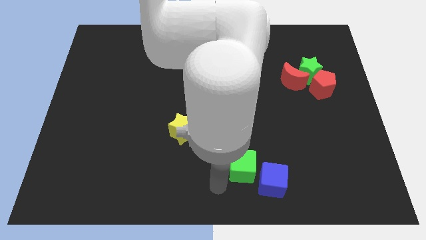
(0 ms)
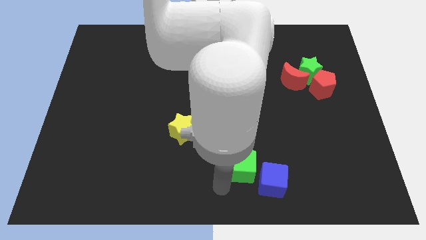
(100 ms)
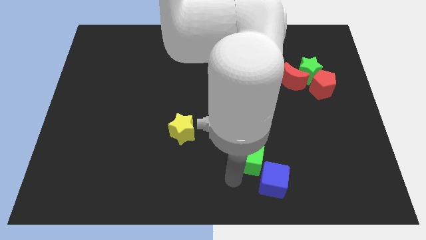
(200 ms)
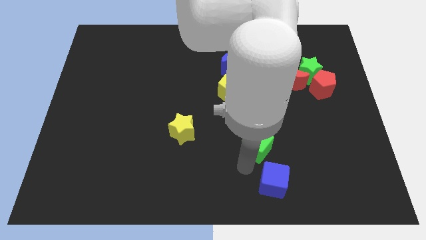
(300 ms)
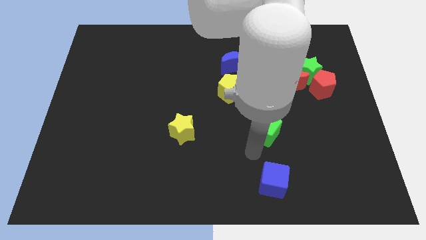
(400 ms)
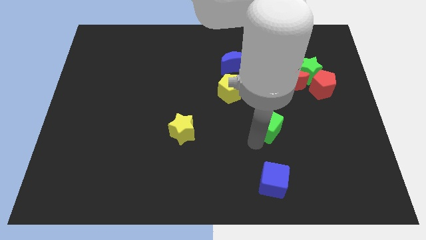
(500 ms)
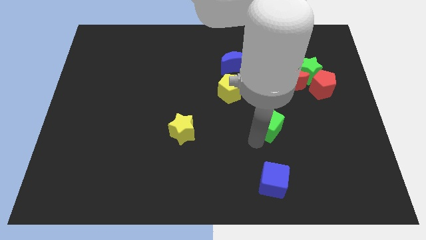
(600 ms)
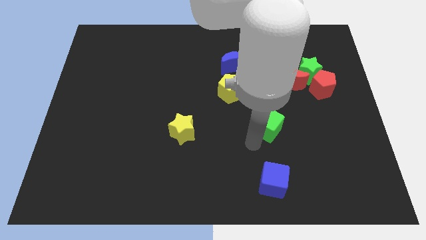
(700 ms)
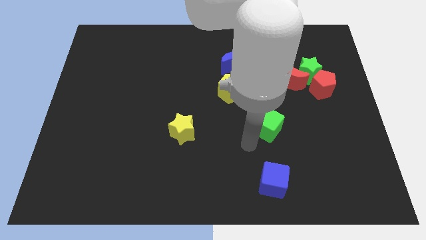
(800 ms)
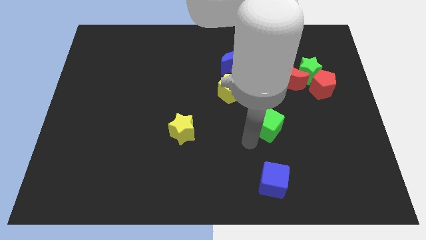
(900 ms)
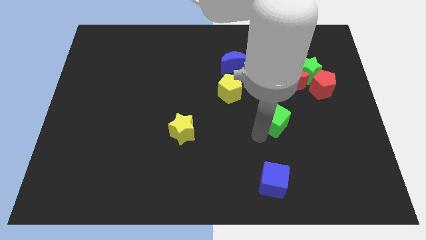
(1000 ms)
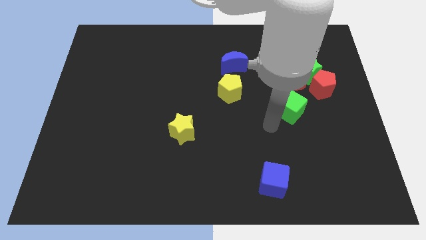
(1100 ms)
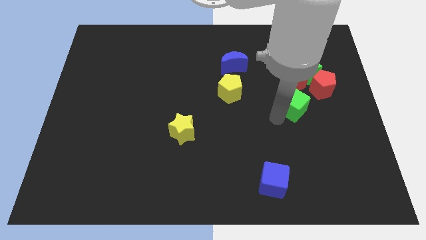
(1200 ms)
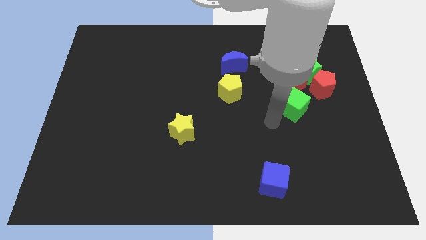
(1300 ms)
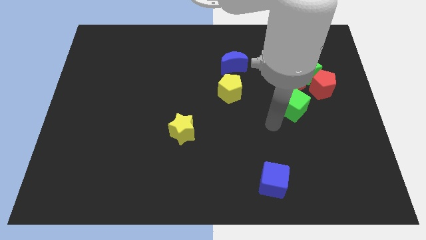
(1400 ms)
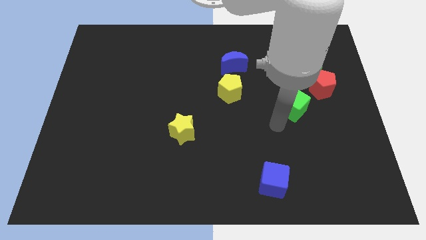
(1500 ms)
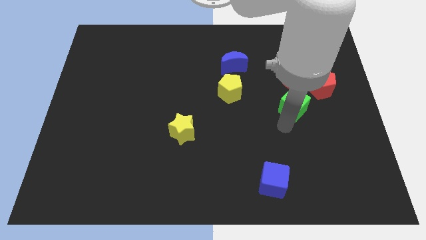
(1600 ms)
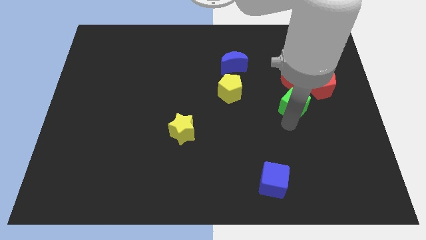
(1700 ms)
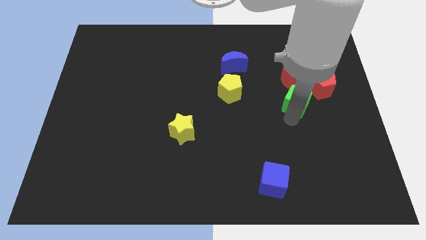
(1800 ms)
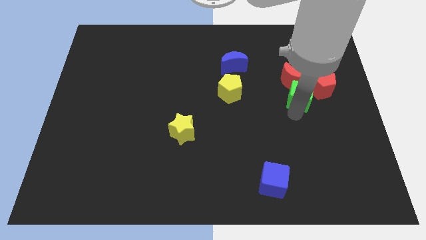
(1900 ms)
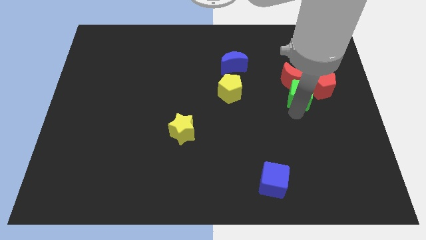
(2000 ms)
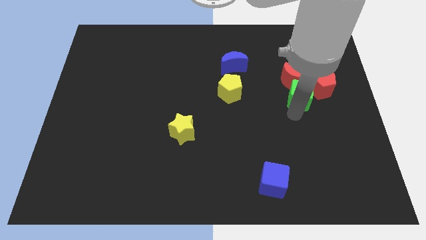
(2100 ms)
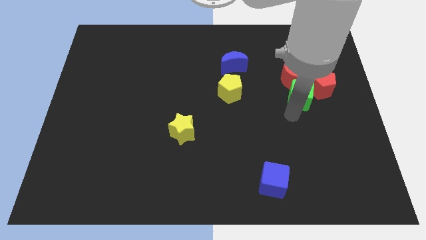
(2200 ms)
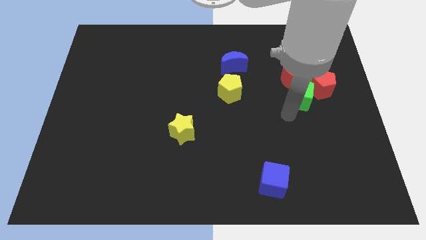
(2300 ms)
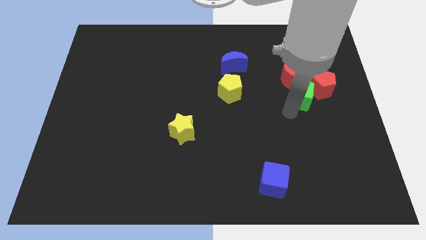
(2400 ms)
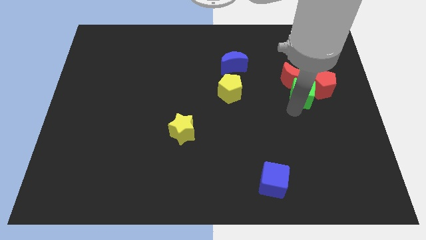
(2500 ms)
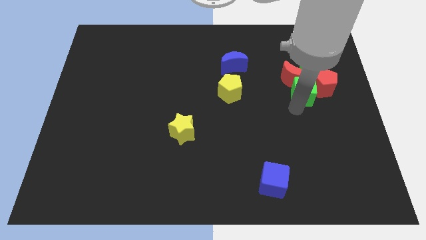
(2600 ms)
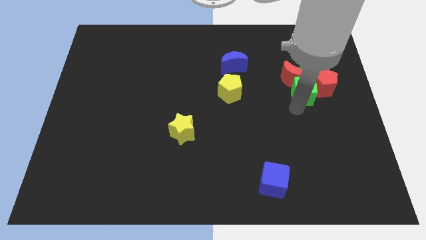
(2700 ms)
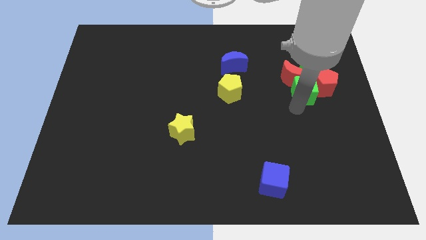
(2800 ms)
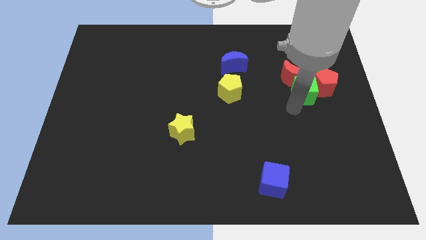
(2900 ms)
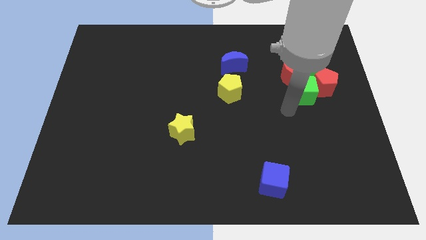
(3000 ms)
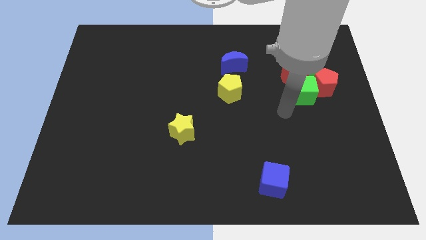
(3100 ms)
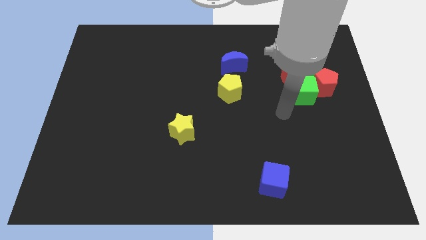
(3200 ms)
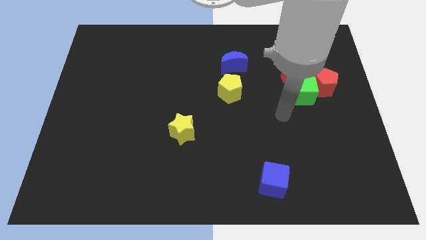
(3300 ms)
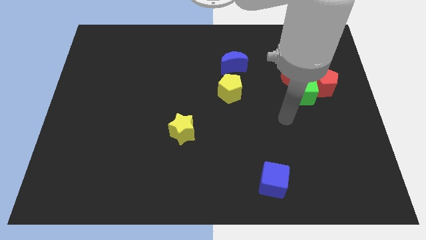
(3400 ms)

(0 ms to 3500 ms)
push the green block into the red pentagon

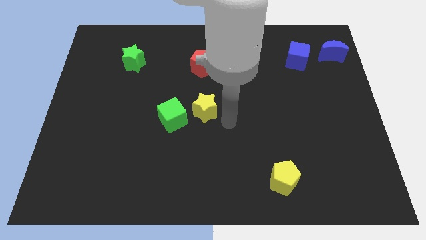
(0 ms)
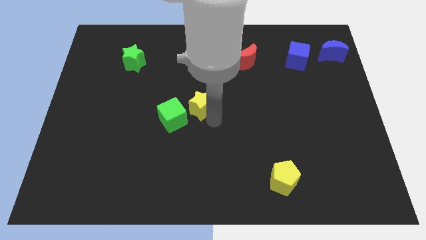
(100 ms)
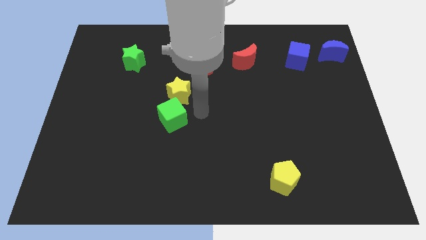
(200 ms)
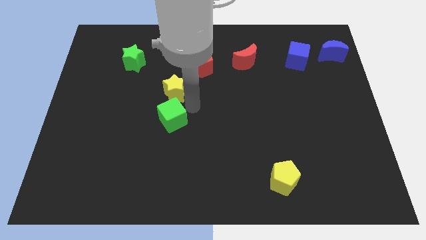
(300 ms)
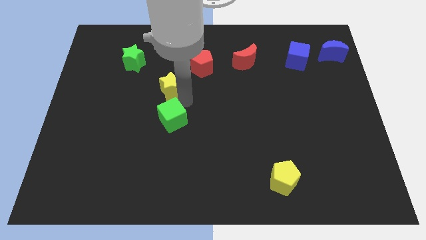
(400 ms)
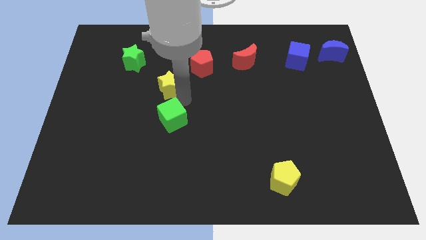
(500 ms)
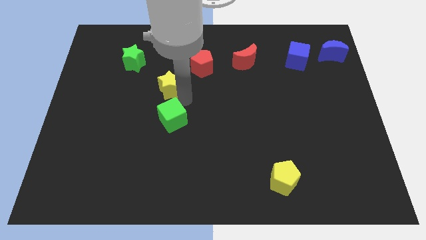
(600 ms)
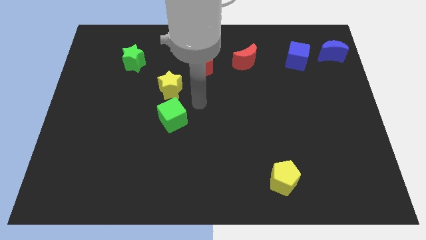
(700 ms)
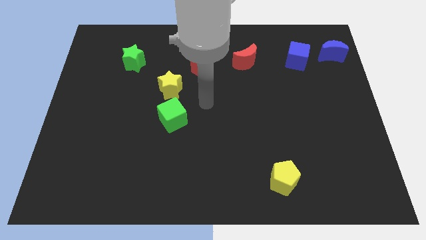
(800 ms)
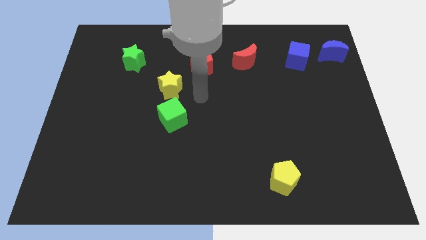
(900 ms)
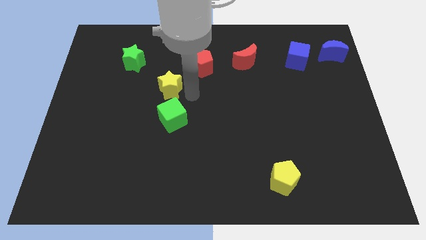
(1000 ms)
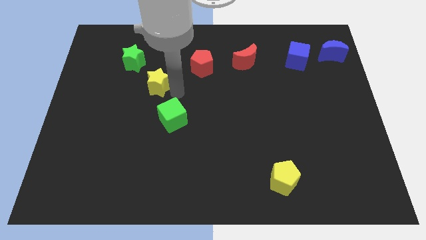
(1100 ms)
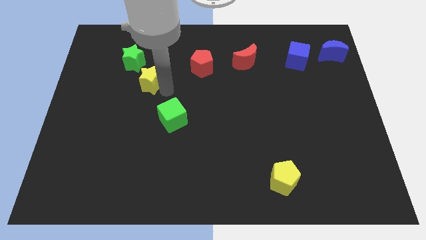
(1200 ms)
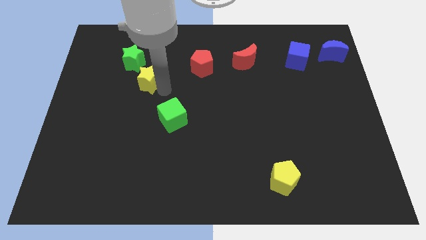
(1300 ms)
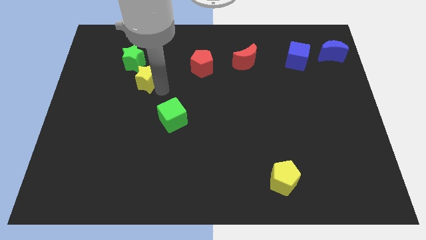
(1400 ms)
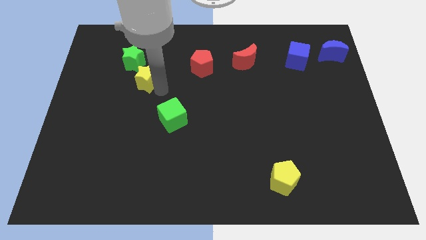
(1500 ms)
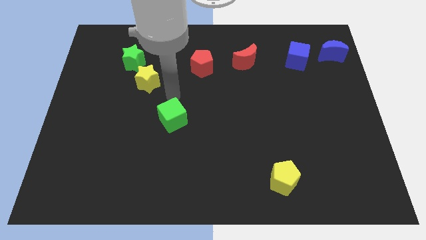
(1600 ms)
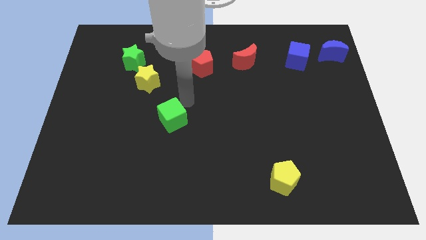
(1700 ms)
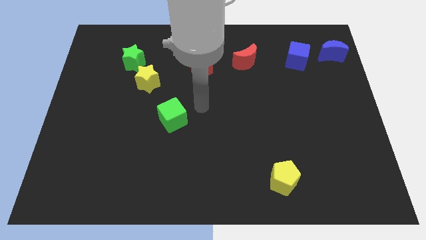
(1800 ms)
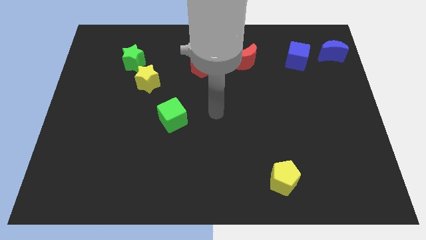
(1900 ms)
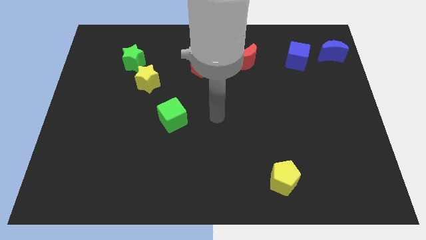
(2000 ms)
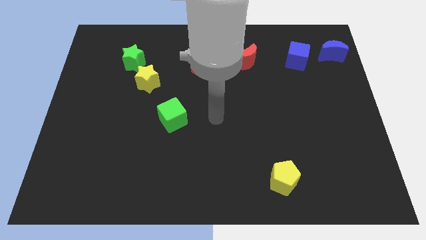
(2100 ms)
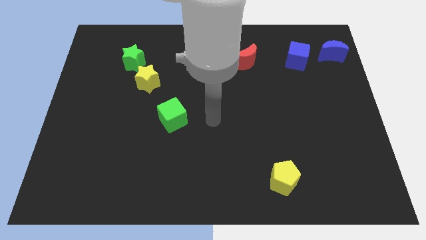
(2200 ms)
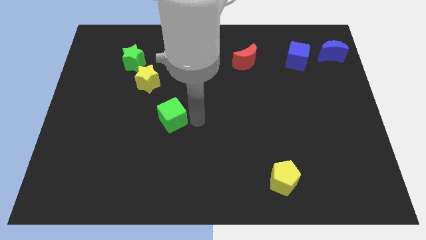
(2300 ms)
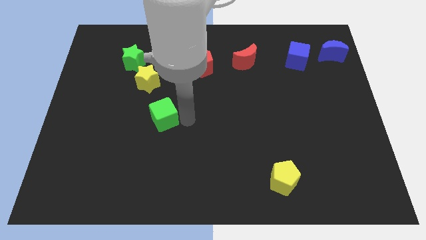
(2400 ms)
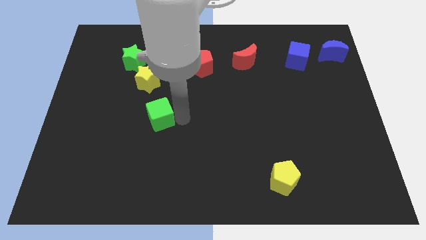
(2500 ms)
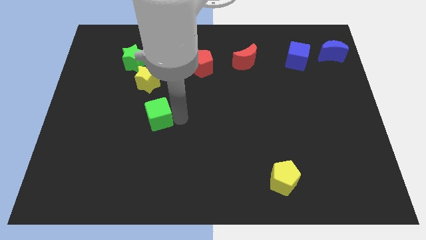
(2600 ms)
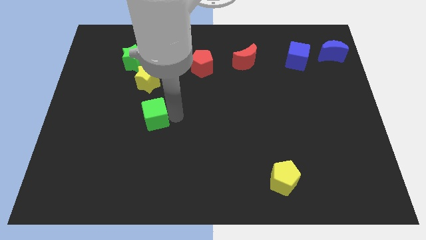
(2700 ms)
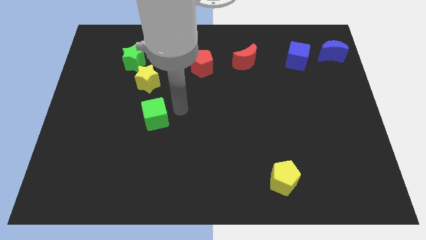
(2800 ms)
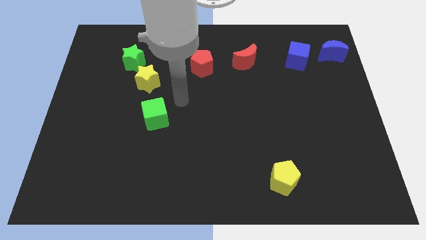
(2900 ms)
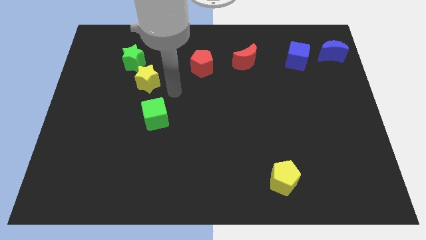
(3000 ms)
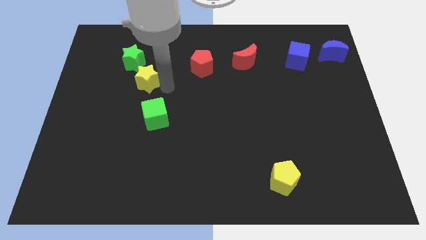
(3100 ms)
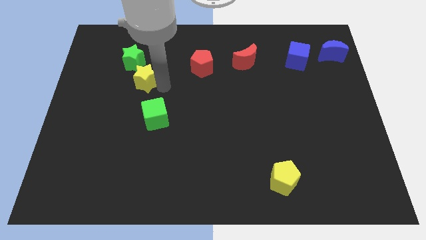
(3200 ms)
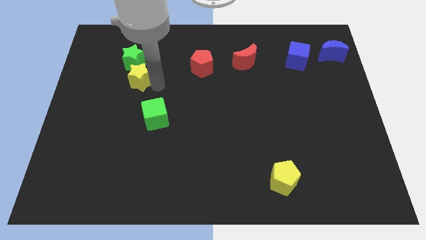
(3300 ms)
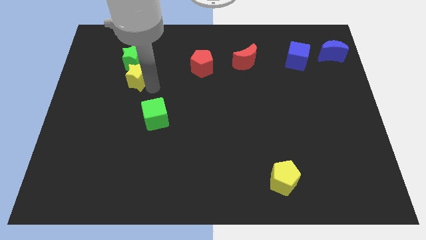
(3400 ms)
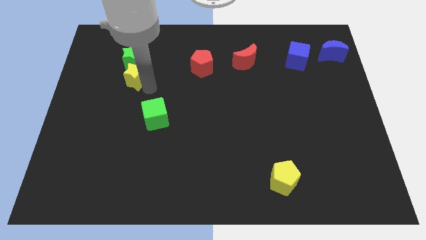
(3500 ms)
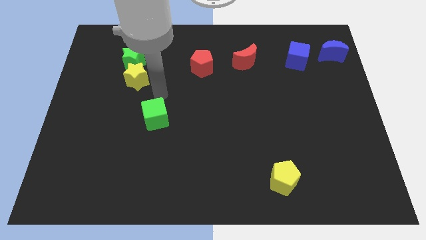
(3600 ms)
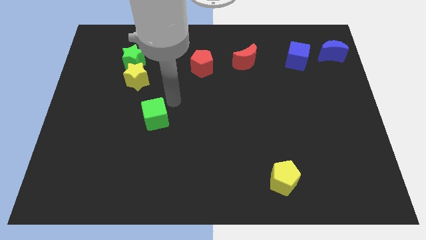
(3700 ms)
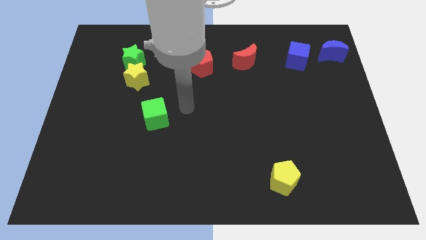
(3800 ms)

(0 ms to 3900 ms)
place the yellow star between thew green star and green square and gently push the green square towards left side

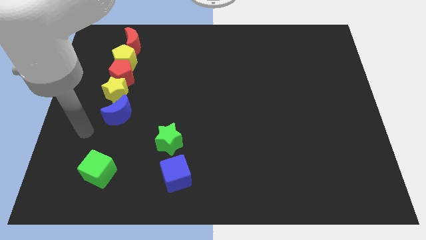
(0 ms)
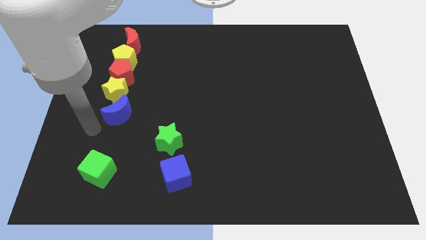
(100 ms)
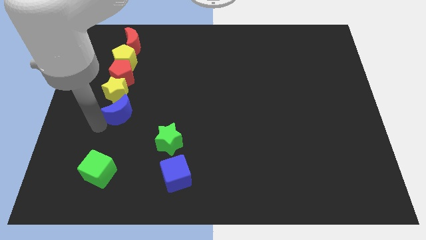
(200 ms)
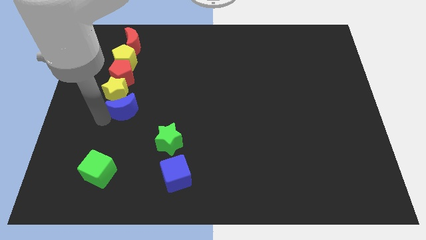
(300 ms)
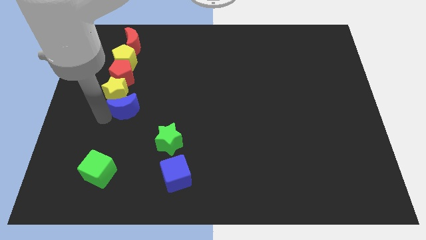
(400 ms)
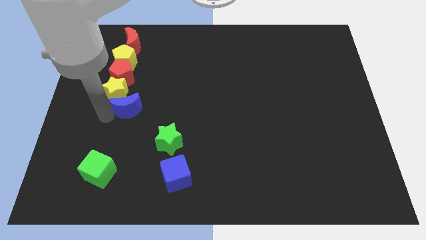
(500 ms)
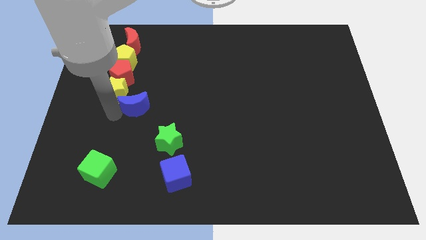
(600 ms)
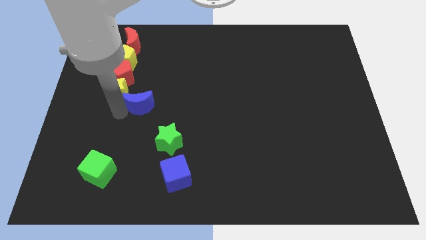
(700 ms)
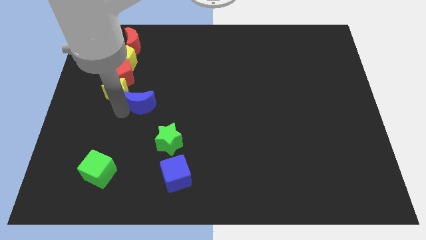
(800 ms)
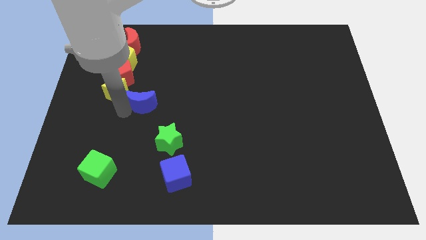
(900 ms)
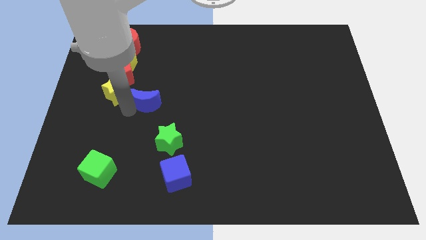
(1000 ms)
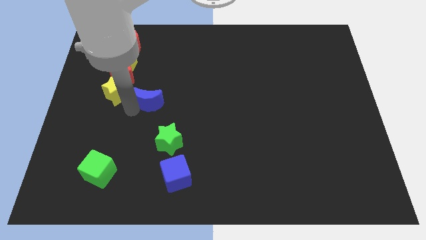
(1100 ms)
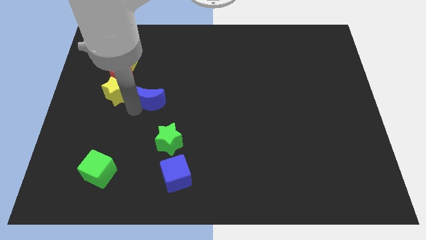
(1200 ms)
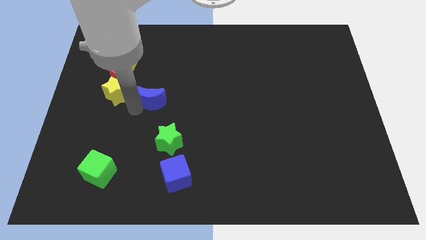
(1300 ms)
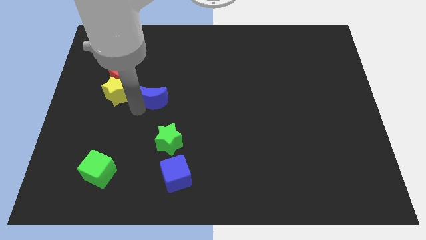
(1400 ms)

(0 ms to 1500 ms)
place the blue moon right to the yellow star
